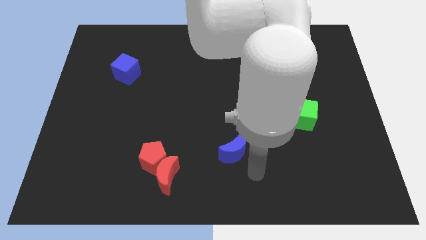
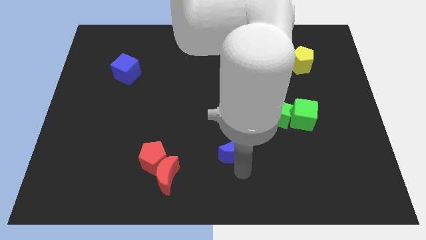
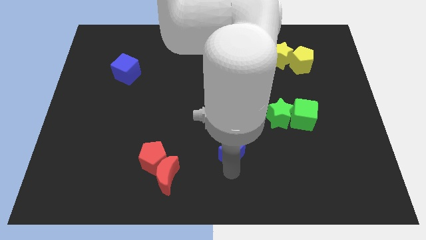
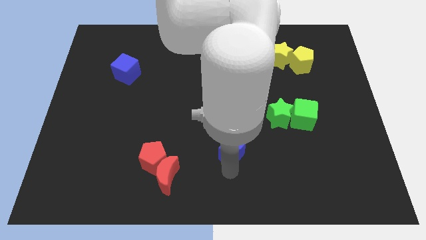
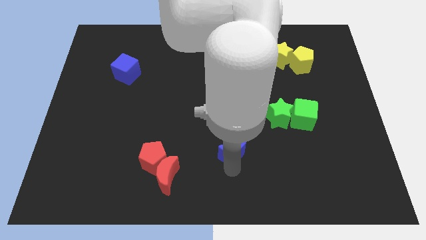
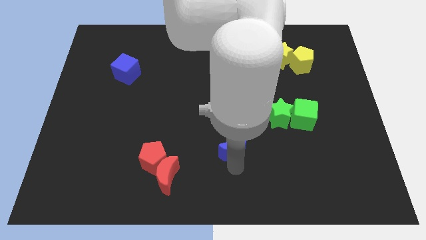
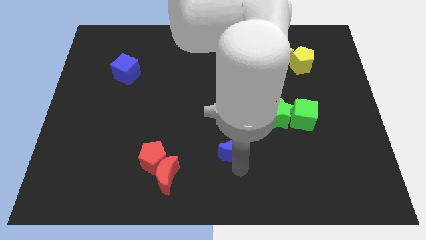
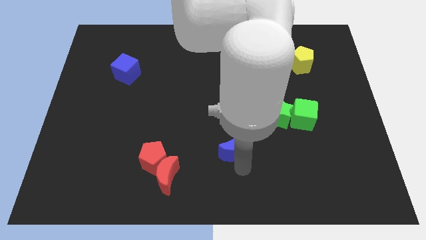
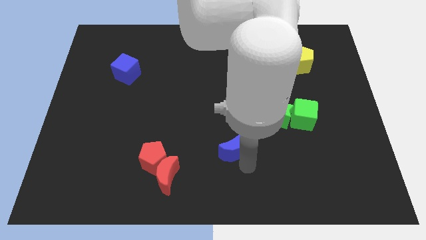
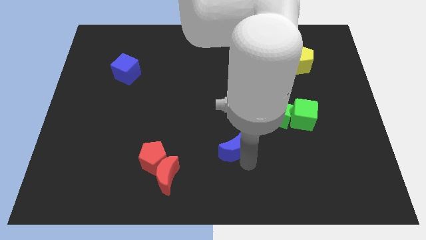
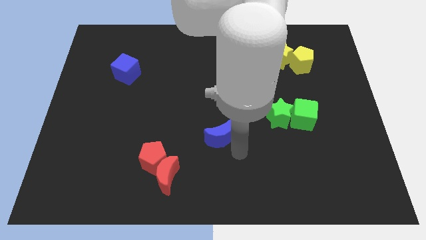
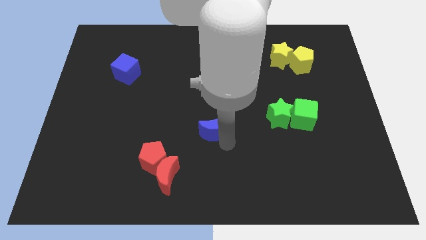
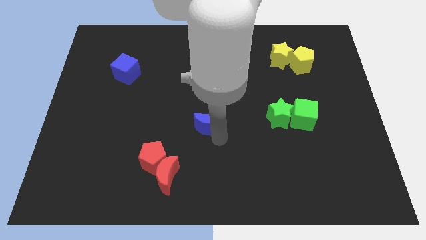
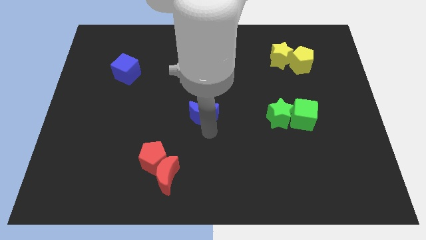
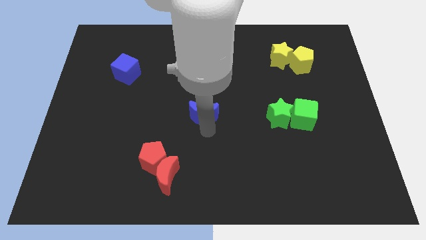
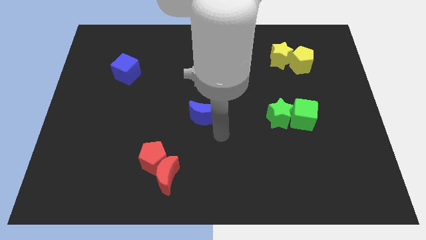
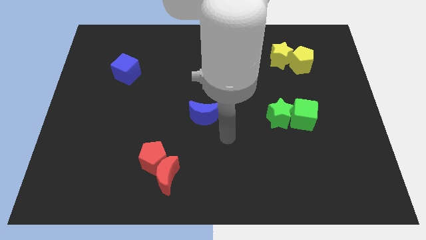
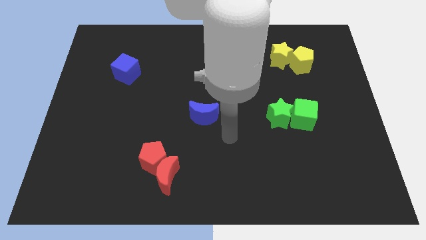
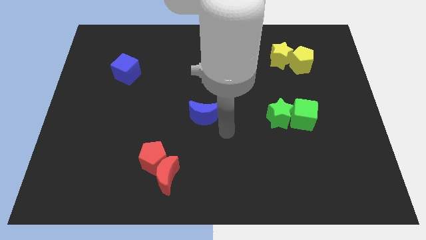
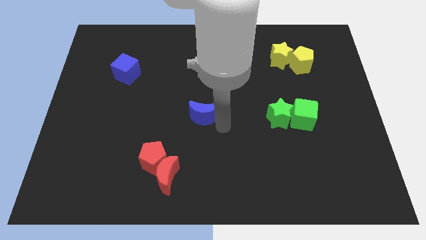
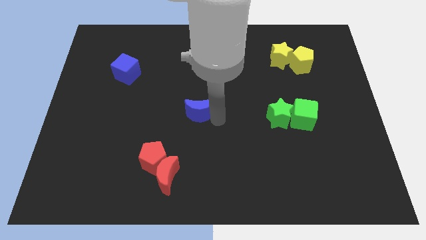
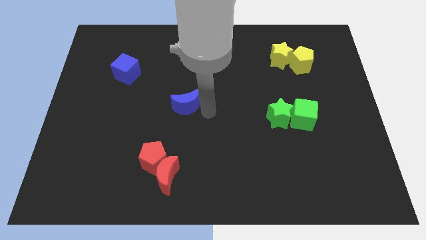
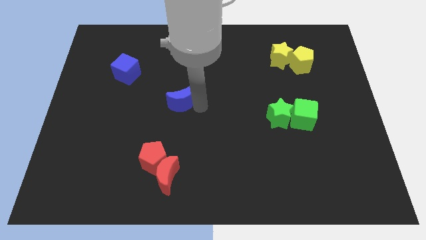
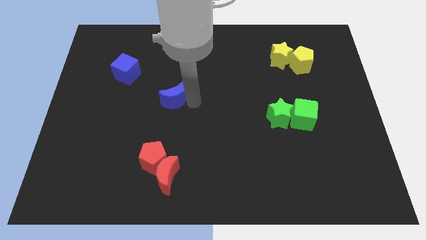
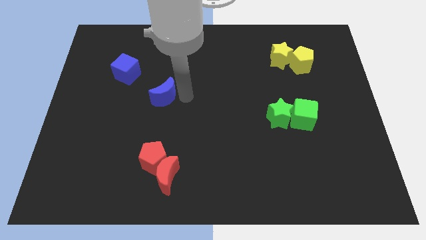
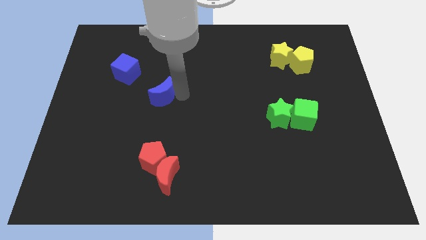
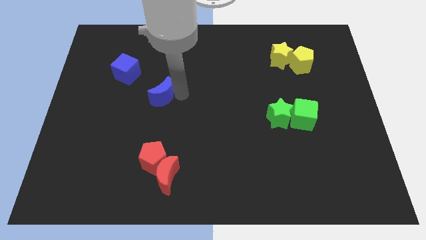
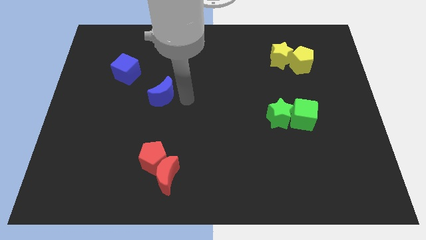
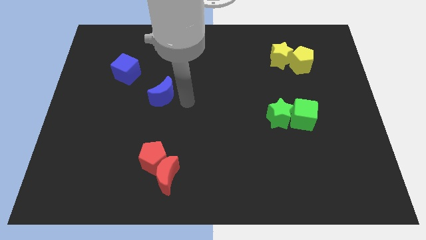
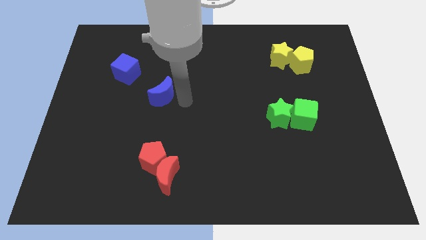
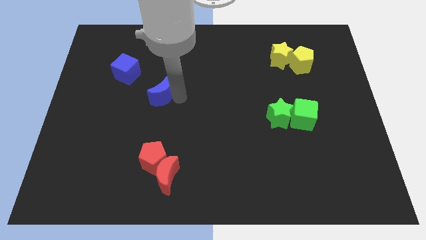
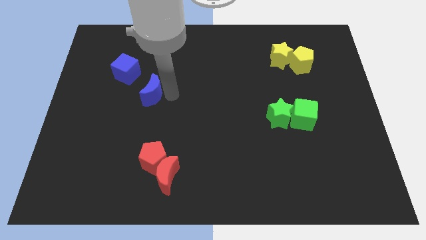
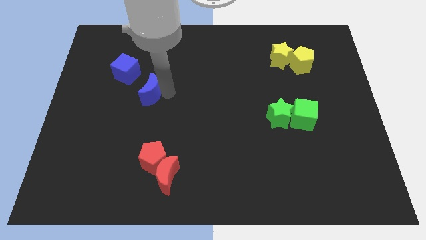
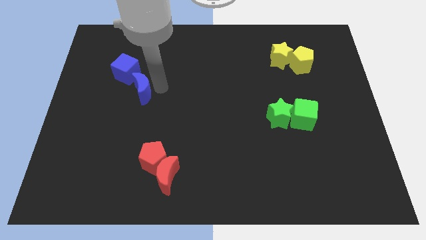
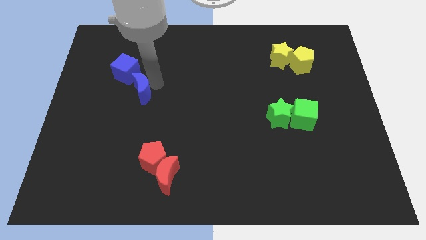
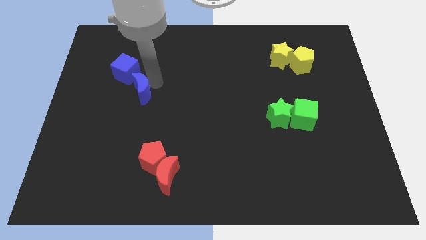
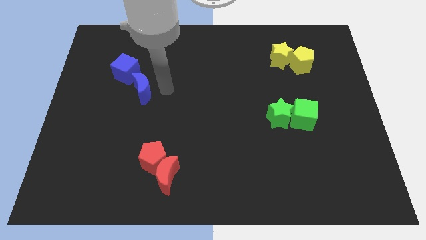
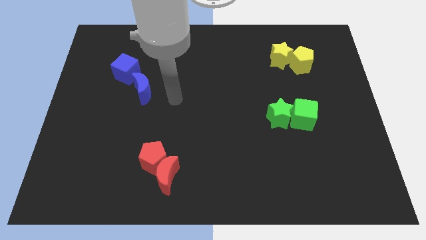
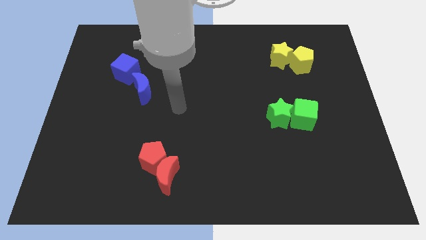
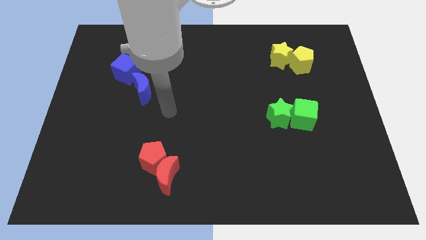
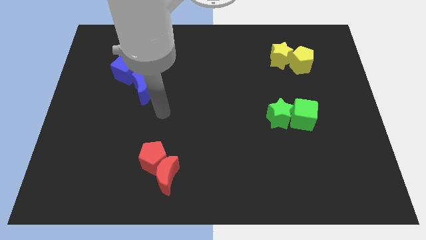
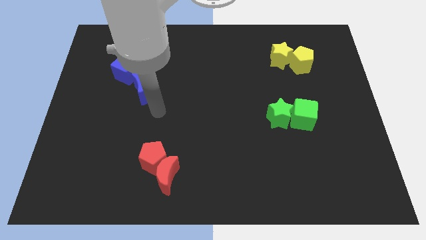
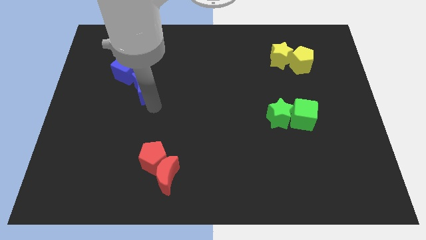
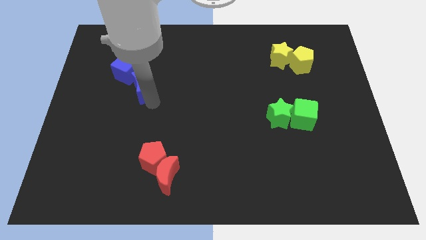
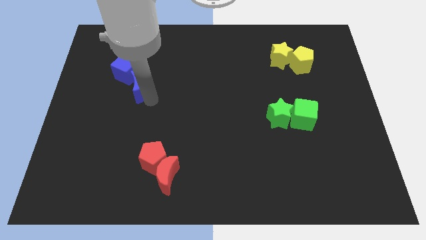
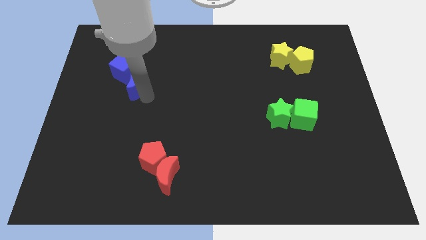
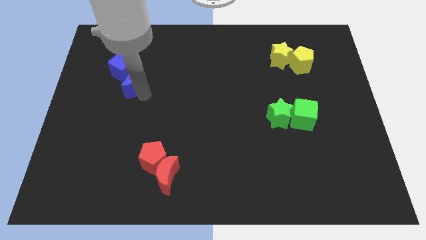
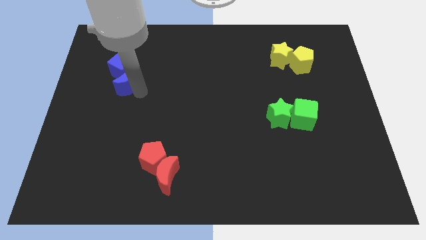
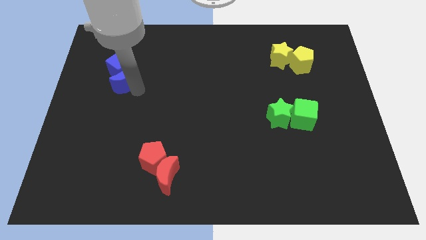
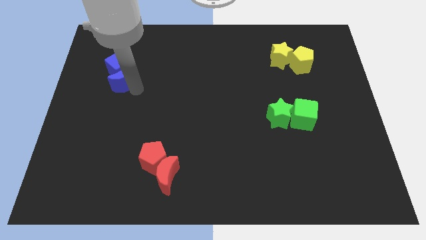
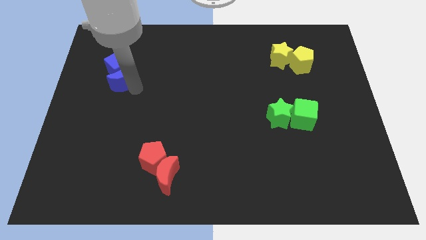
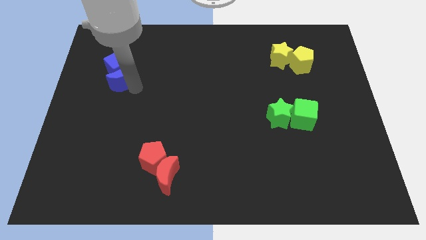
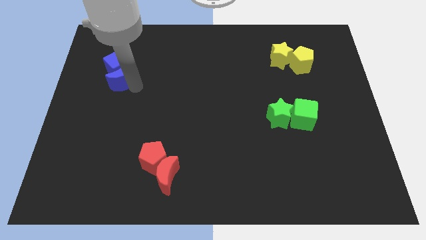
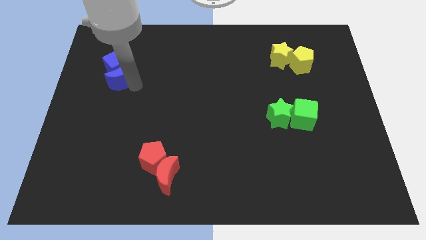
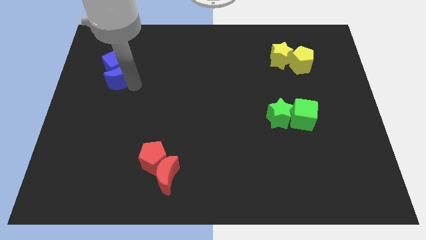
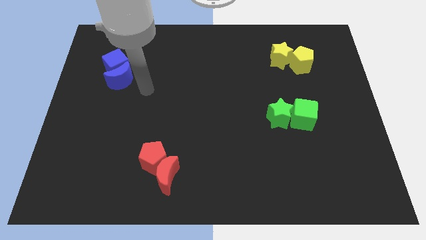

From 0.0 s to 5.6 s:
attach the blue moon to the blue cube

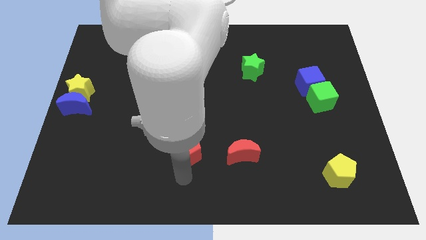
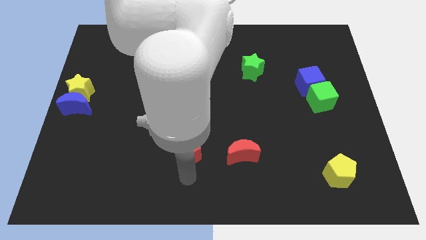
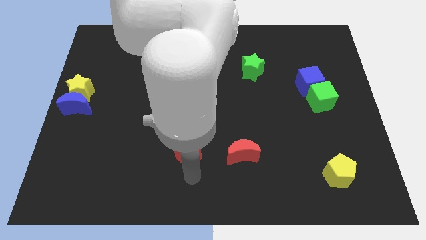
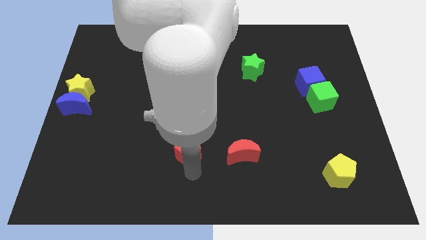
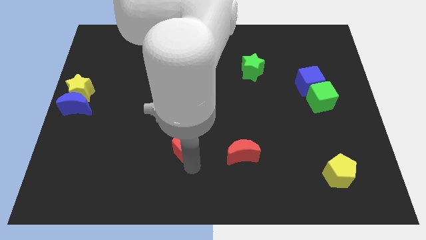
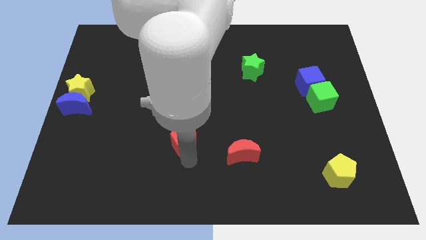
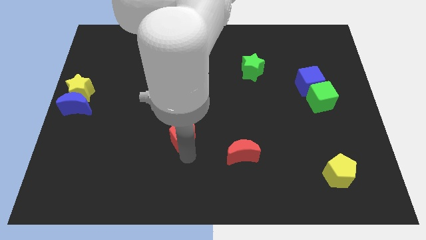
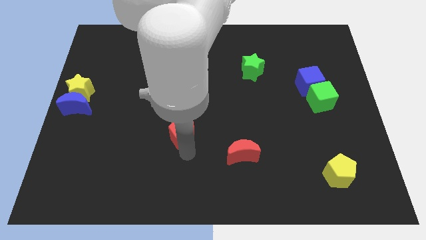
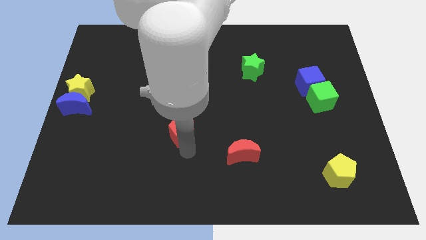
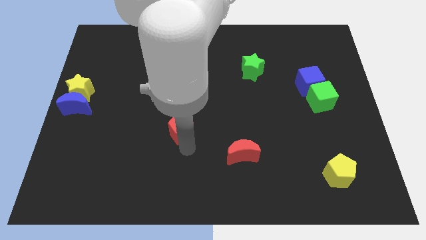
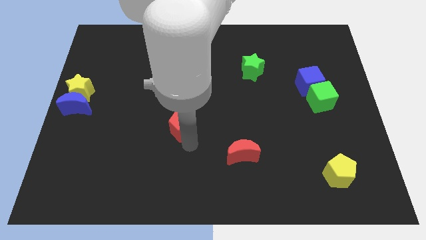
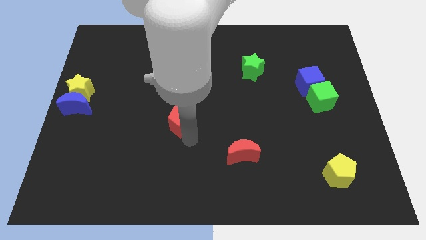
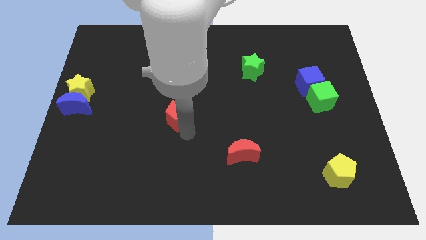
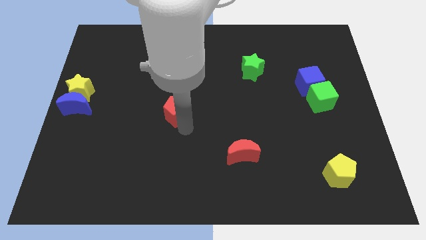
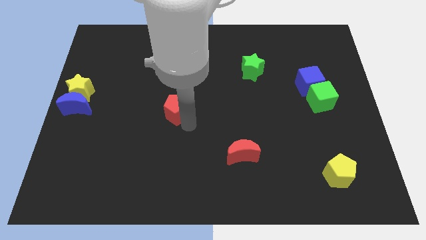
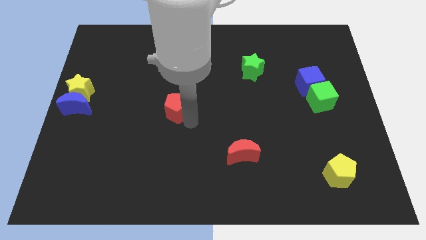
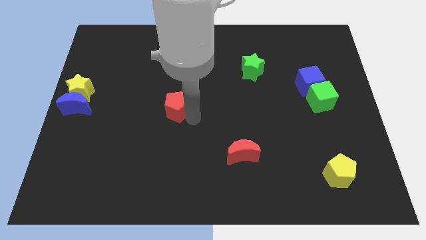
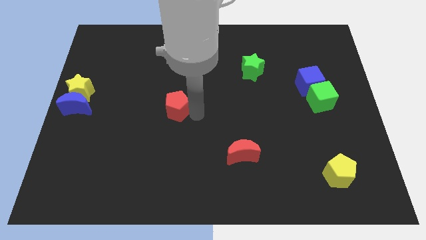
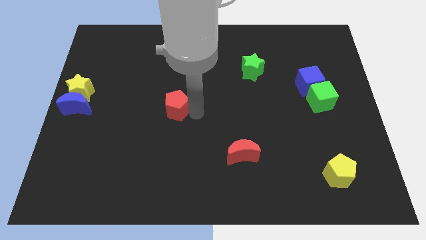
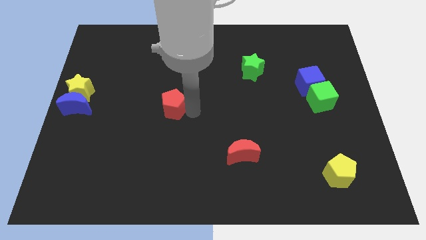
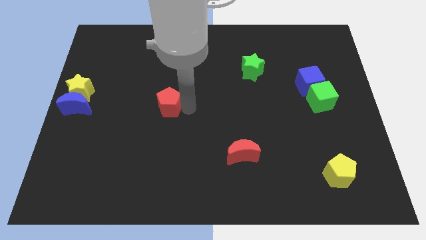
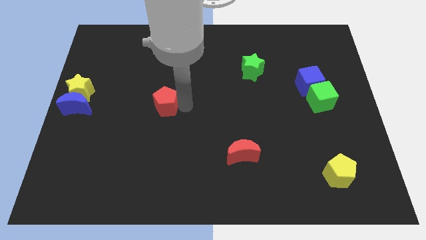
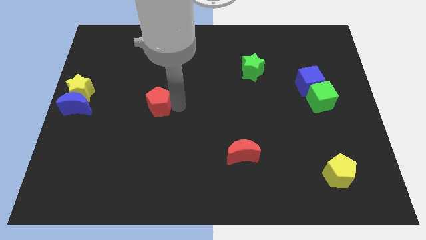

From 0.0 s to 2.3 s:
slide the red pentagon to the right of the blue moon

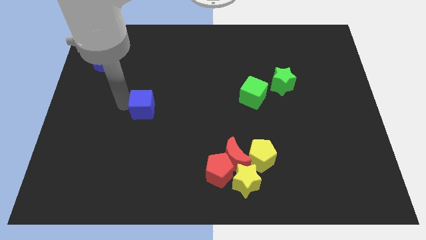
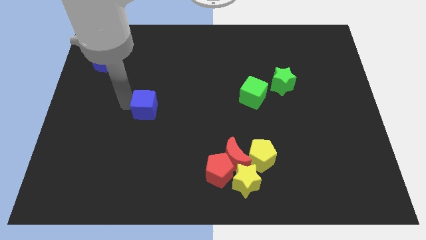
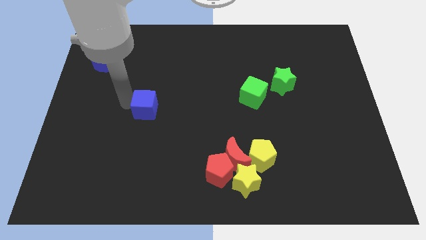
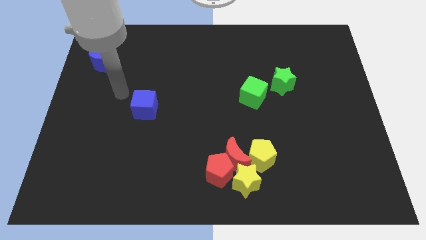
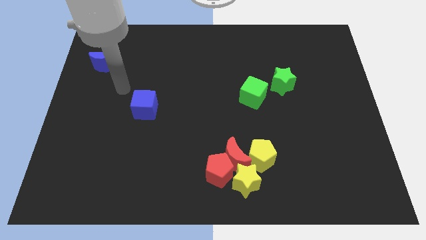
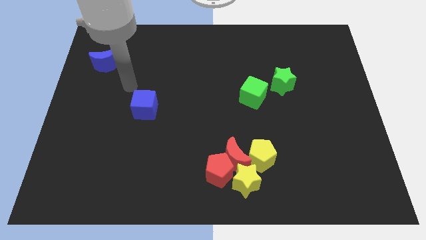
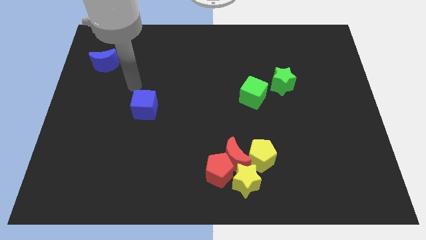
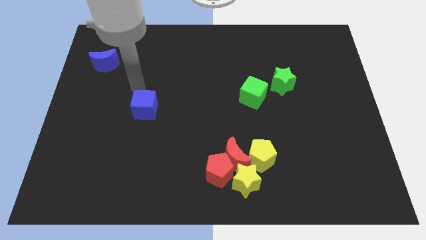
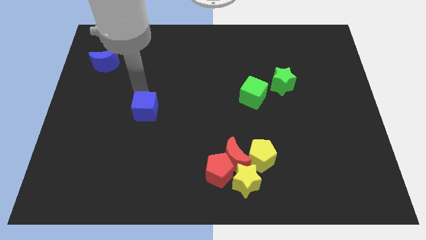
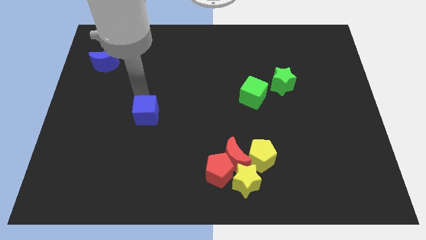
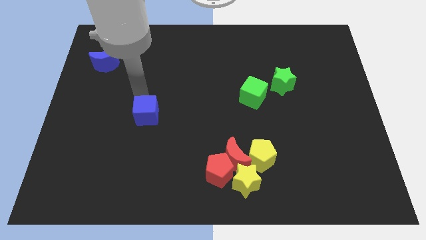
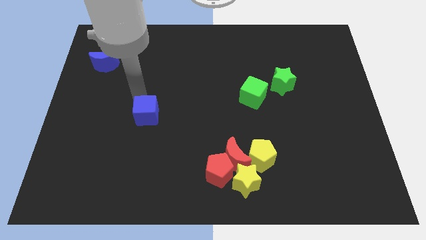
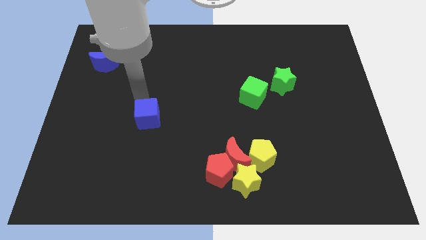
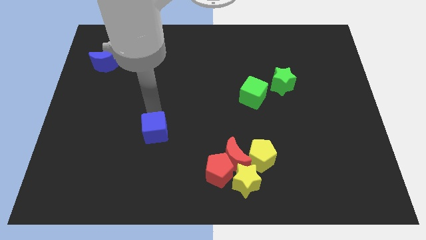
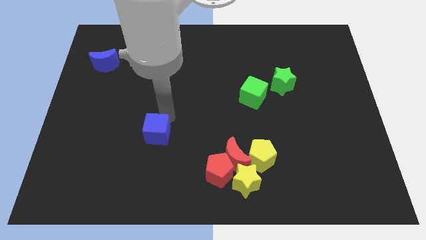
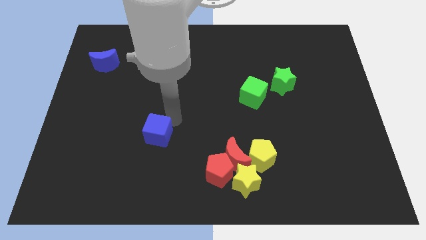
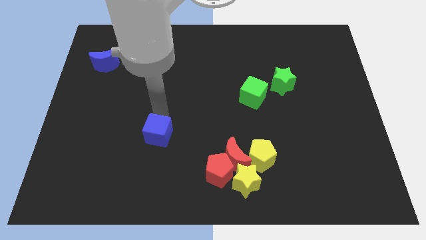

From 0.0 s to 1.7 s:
push the blue cube towards down
